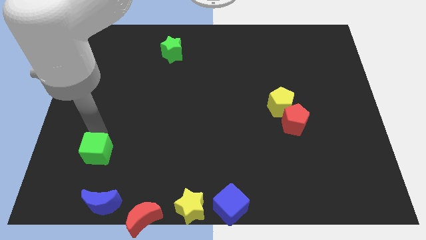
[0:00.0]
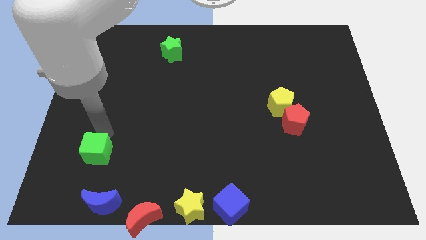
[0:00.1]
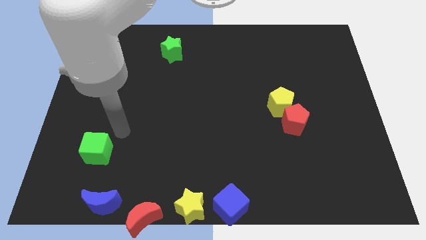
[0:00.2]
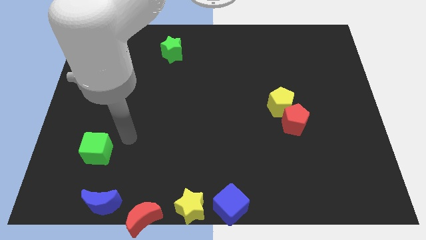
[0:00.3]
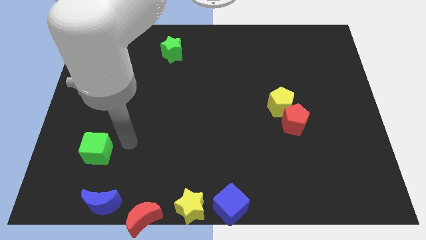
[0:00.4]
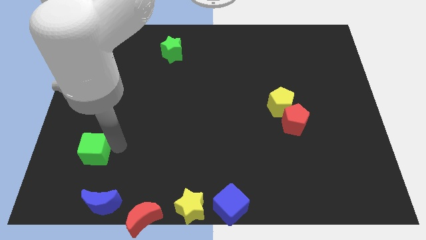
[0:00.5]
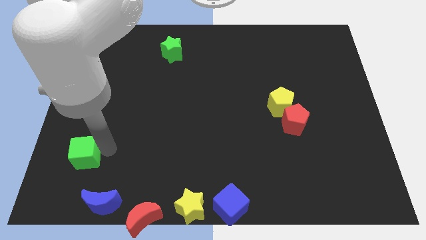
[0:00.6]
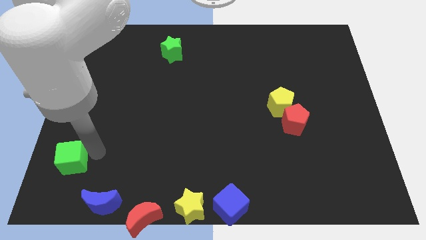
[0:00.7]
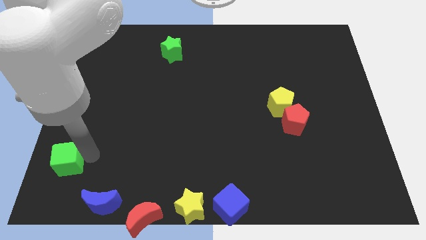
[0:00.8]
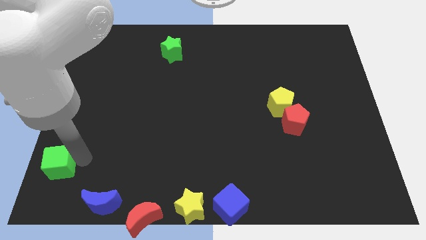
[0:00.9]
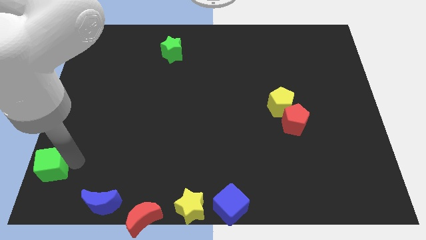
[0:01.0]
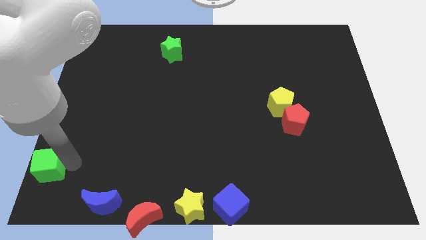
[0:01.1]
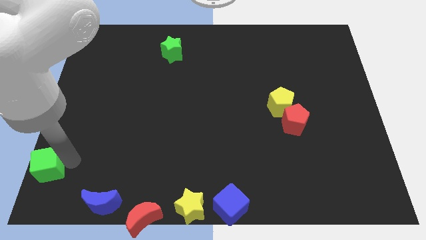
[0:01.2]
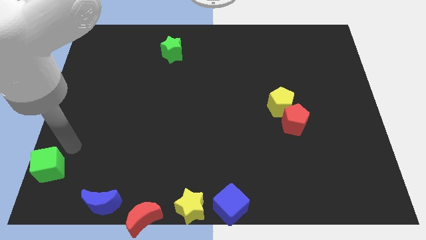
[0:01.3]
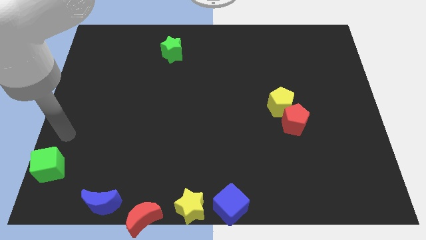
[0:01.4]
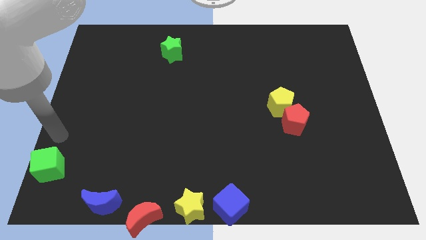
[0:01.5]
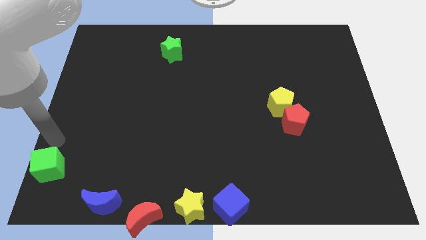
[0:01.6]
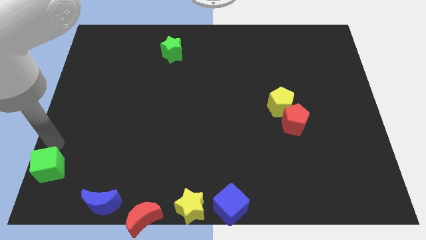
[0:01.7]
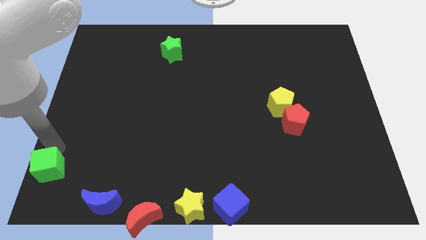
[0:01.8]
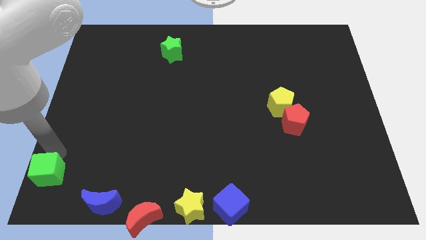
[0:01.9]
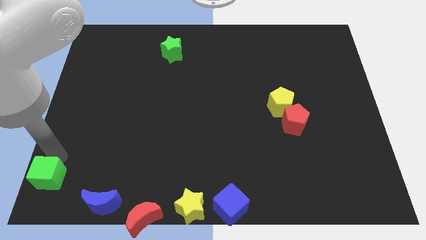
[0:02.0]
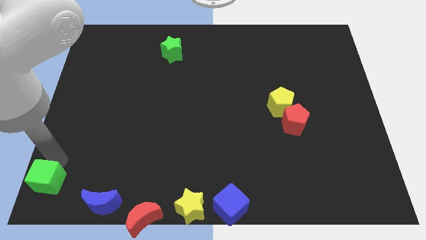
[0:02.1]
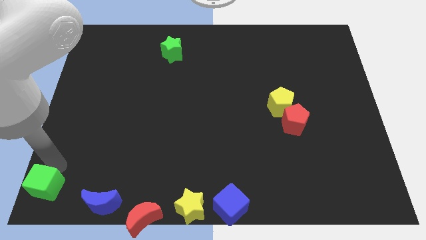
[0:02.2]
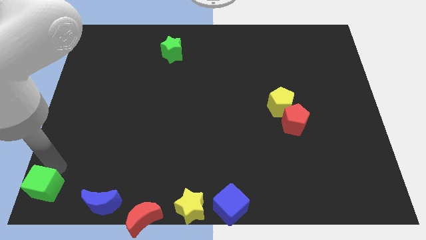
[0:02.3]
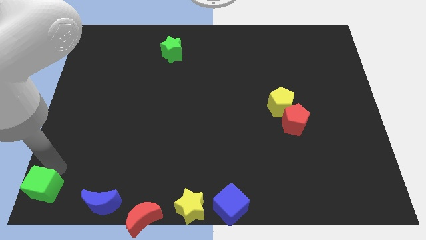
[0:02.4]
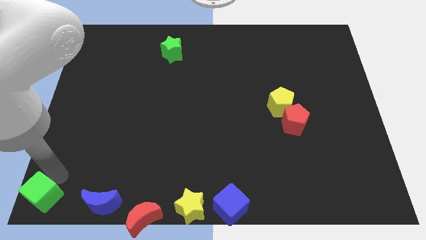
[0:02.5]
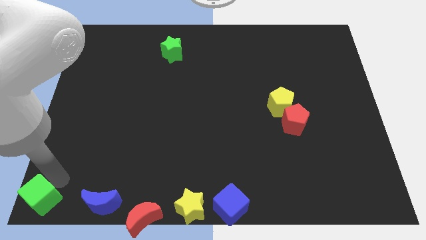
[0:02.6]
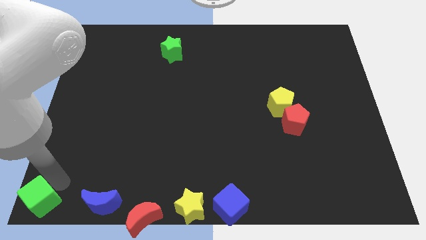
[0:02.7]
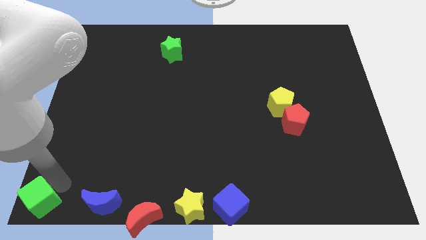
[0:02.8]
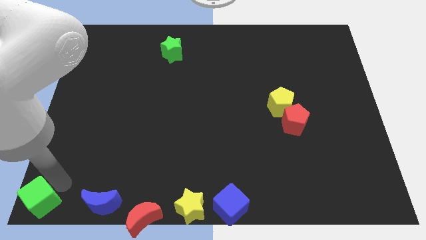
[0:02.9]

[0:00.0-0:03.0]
push the green cube to the bottom left corner of the board

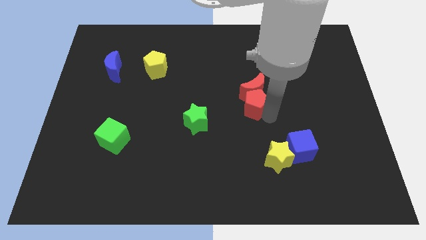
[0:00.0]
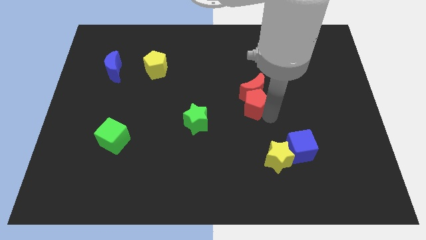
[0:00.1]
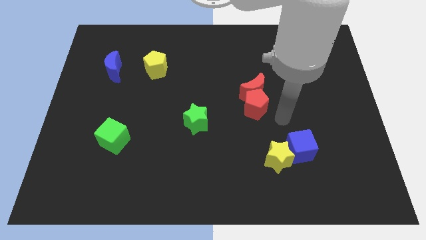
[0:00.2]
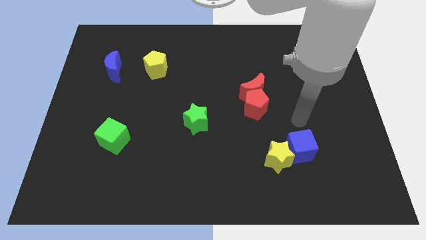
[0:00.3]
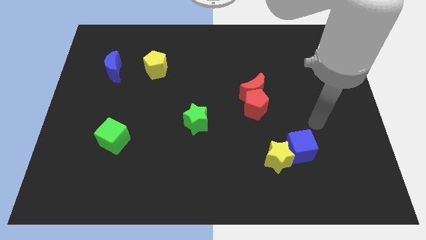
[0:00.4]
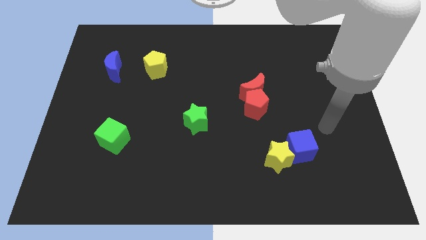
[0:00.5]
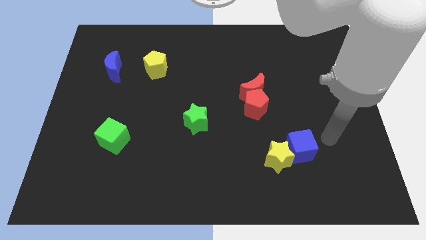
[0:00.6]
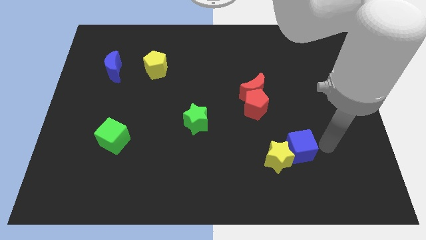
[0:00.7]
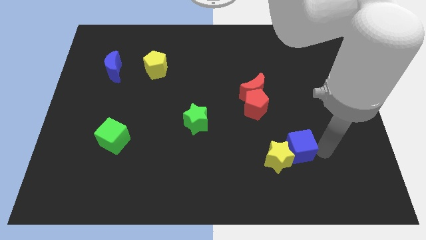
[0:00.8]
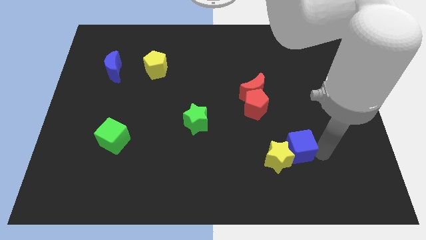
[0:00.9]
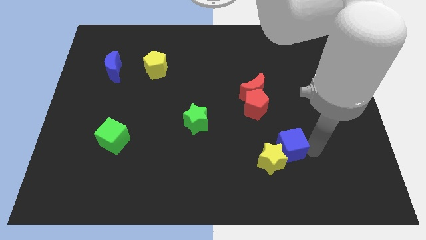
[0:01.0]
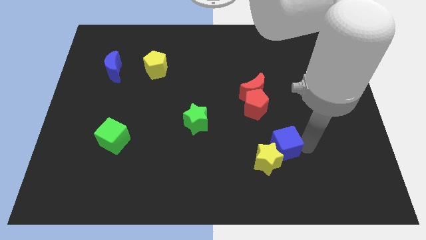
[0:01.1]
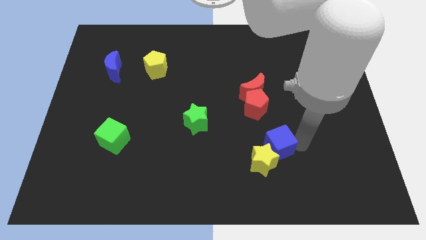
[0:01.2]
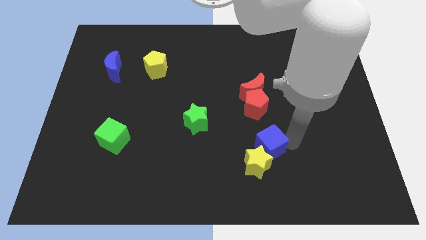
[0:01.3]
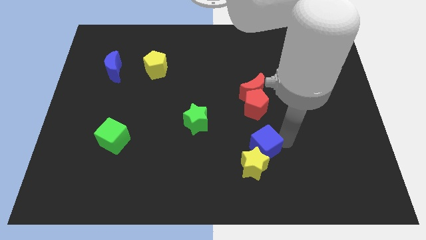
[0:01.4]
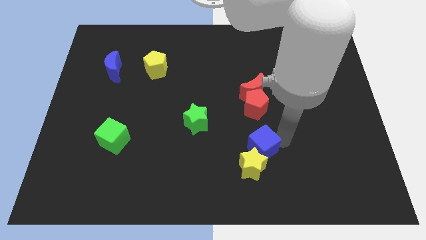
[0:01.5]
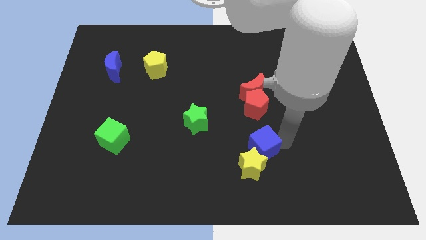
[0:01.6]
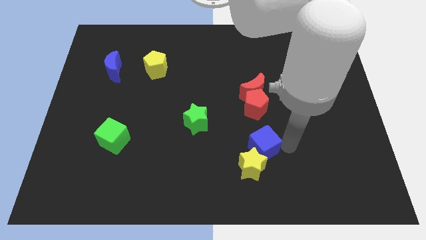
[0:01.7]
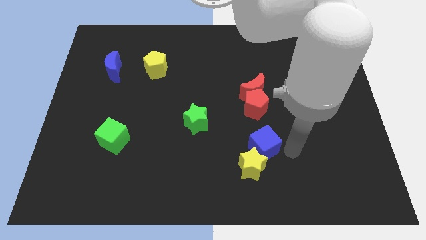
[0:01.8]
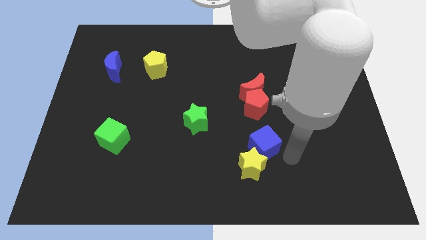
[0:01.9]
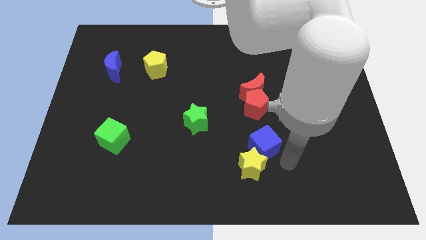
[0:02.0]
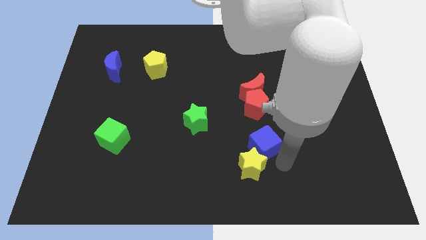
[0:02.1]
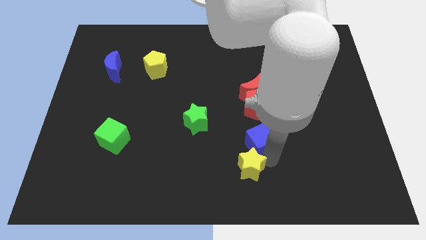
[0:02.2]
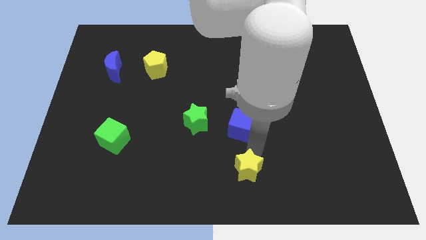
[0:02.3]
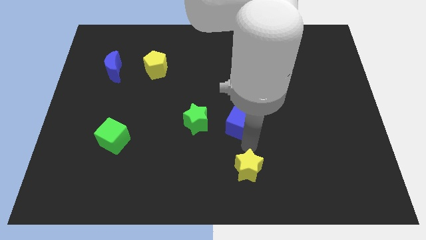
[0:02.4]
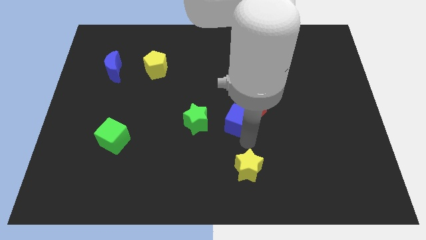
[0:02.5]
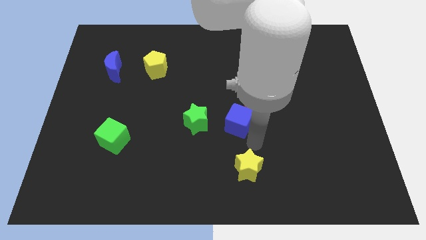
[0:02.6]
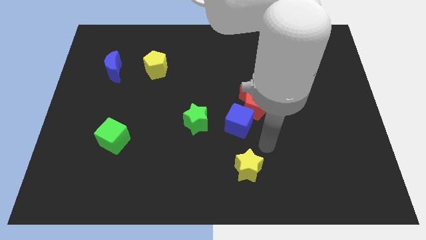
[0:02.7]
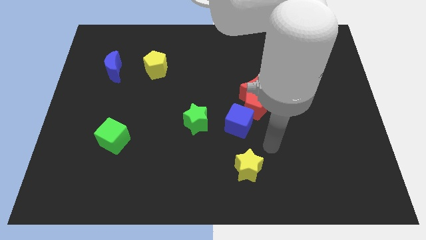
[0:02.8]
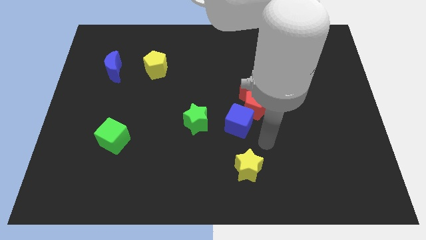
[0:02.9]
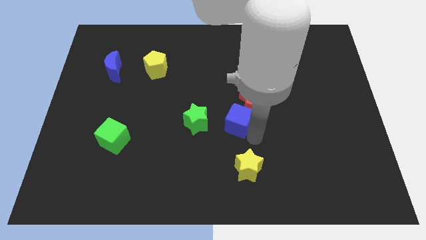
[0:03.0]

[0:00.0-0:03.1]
push the blue cube to the bottom left to the red pentagon

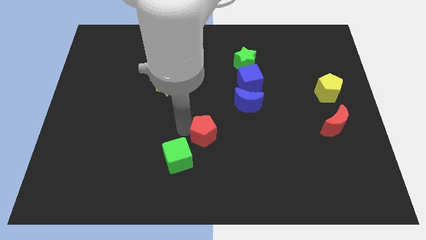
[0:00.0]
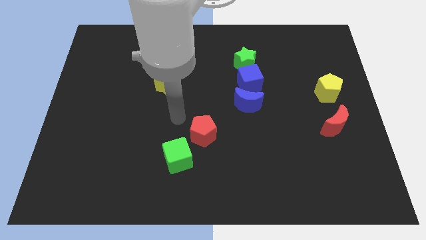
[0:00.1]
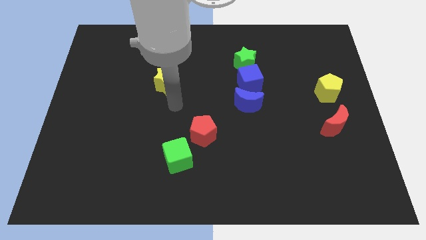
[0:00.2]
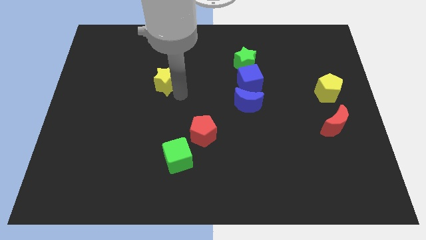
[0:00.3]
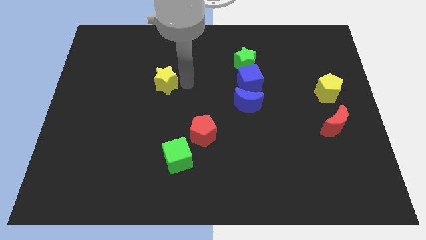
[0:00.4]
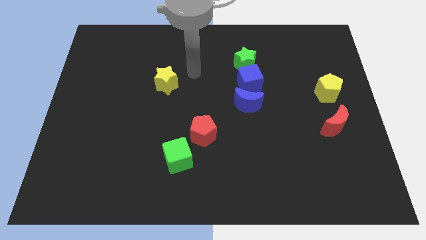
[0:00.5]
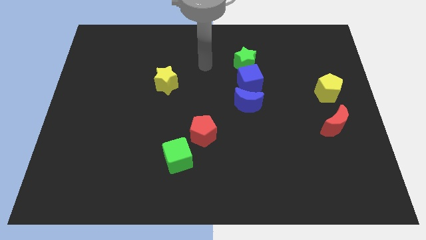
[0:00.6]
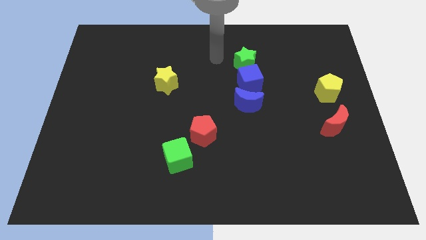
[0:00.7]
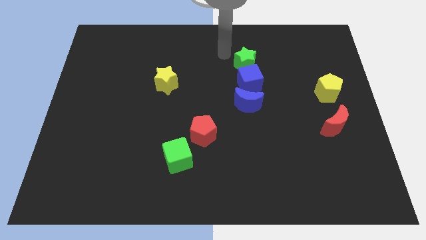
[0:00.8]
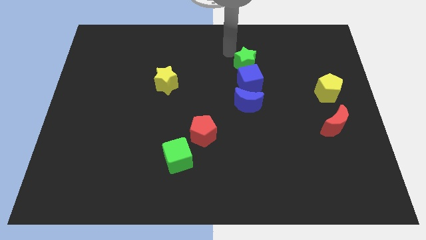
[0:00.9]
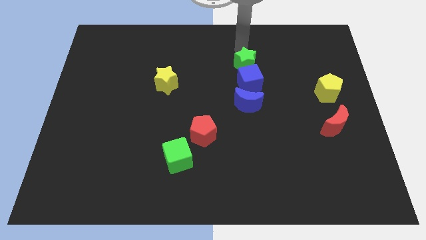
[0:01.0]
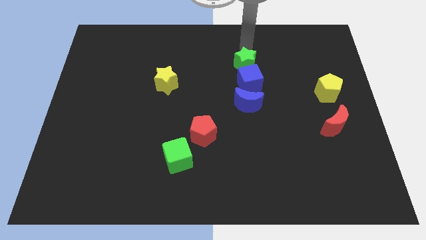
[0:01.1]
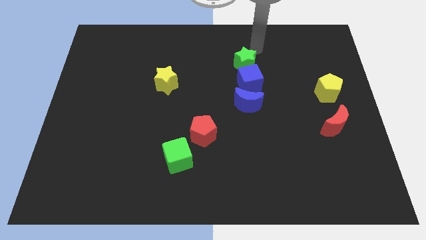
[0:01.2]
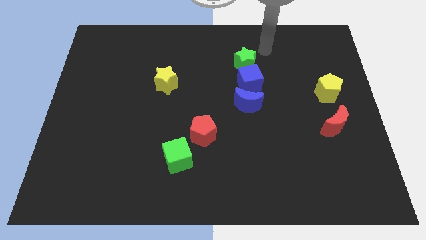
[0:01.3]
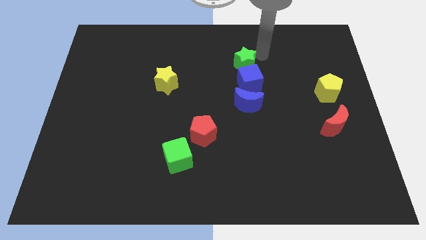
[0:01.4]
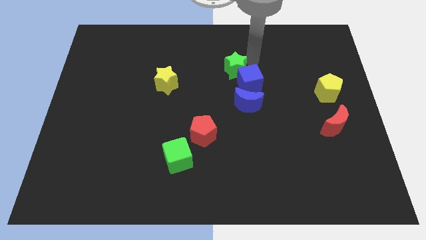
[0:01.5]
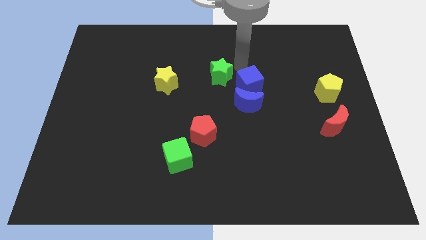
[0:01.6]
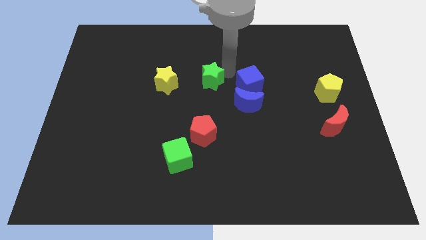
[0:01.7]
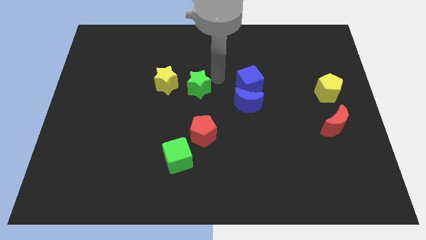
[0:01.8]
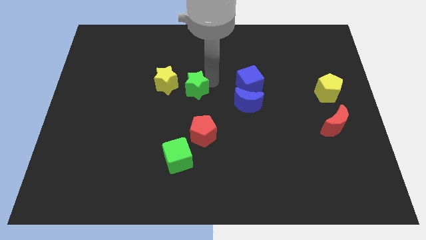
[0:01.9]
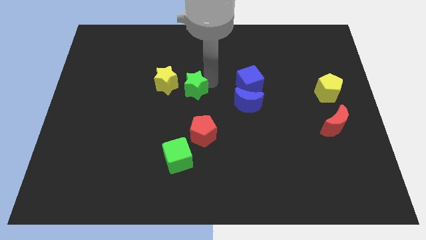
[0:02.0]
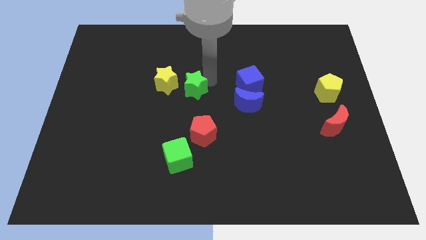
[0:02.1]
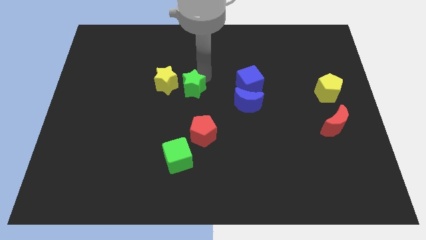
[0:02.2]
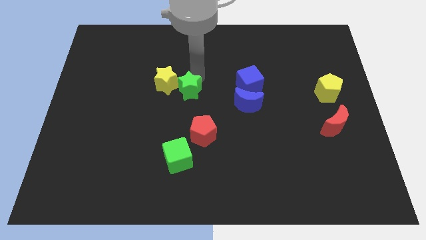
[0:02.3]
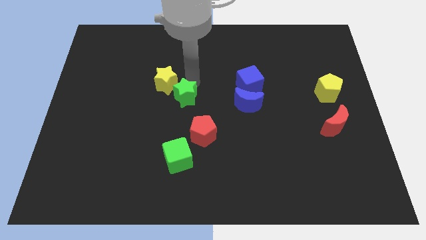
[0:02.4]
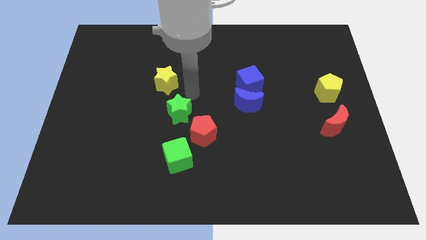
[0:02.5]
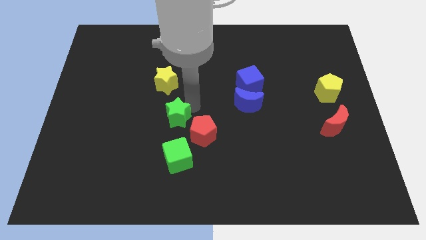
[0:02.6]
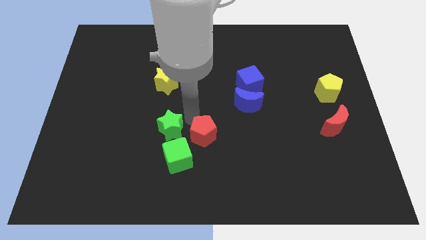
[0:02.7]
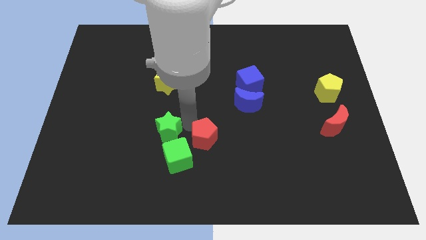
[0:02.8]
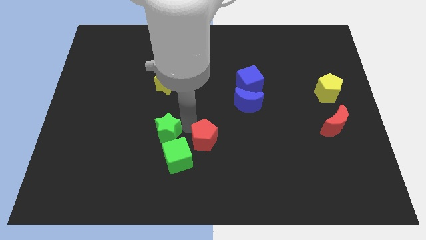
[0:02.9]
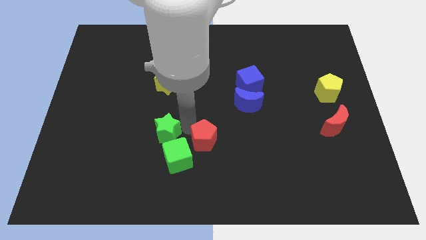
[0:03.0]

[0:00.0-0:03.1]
place green star above green cube
